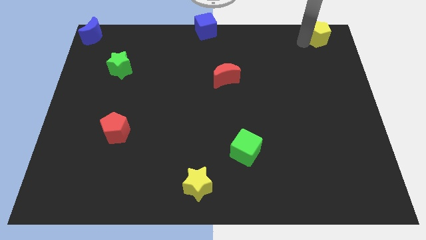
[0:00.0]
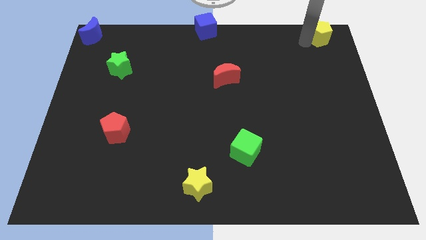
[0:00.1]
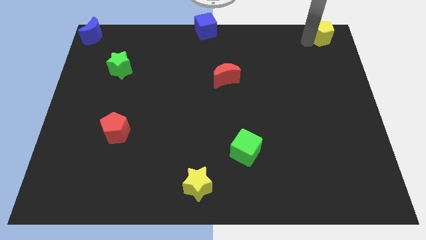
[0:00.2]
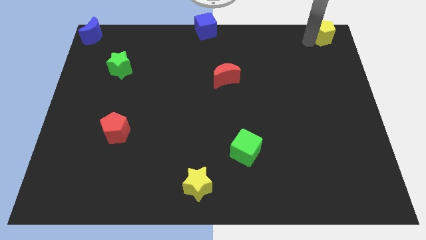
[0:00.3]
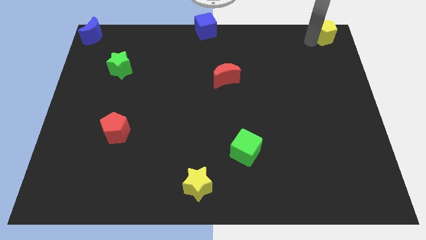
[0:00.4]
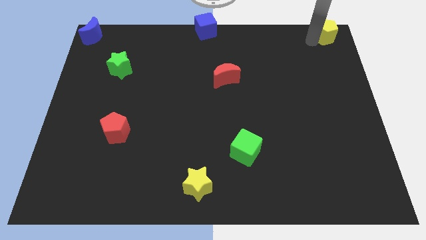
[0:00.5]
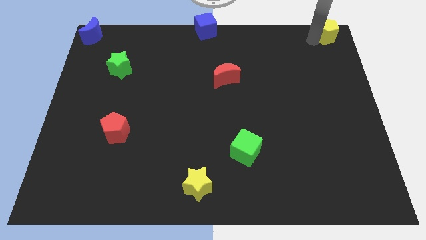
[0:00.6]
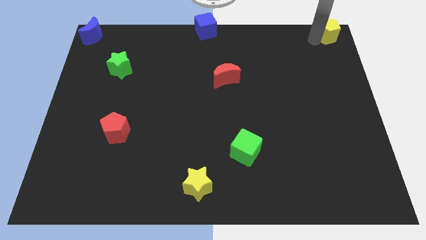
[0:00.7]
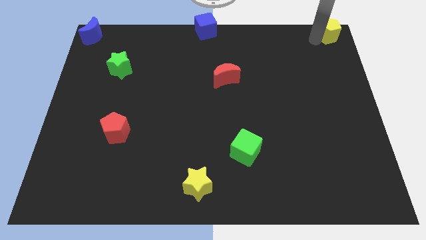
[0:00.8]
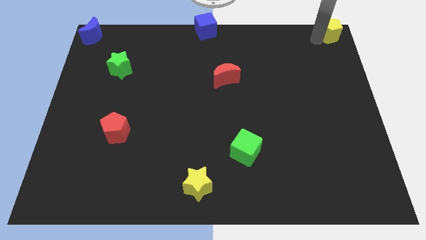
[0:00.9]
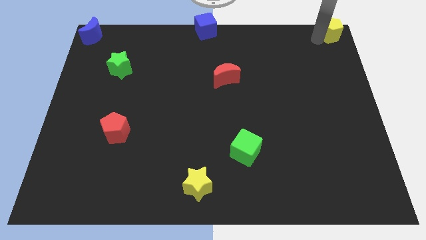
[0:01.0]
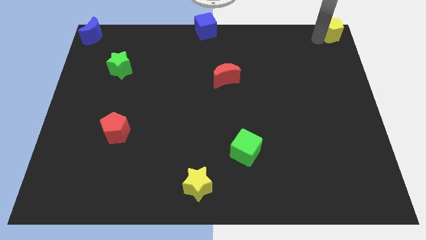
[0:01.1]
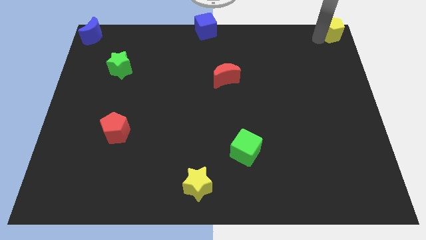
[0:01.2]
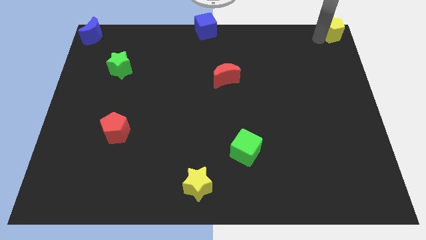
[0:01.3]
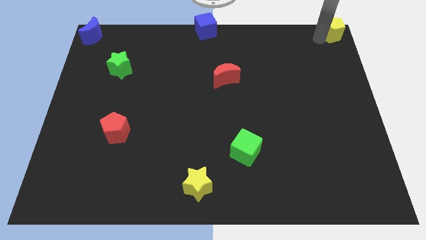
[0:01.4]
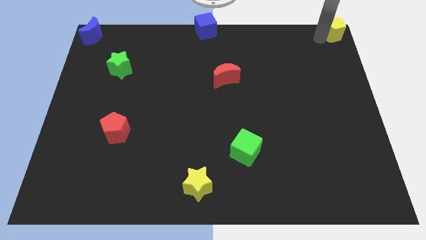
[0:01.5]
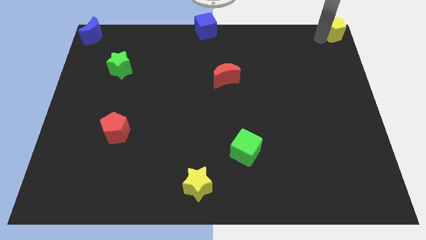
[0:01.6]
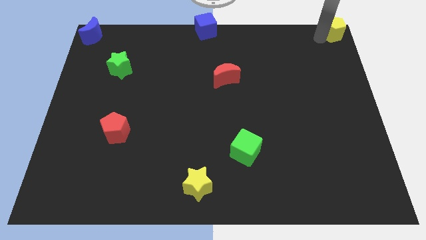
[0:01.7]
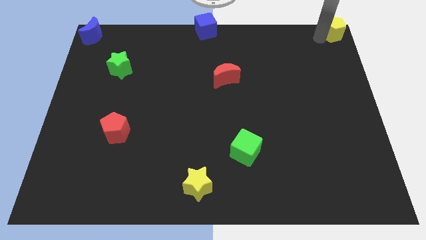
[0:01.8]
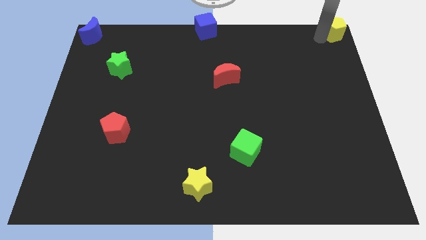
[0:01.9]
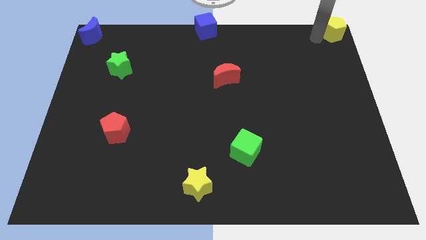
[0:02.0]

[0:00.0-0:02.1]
push the yellow pentagon to the top right corner of the board

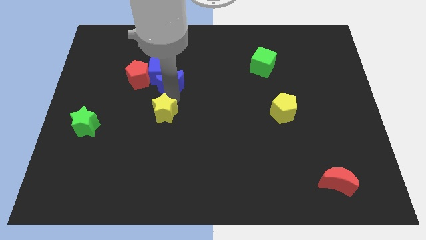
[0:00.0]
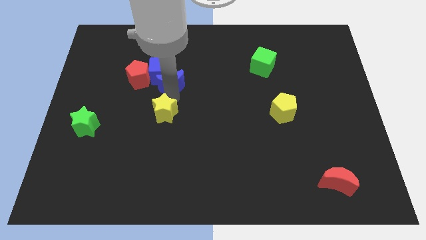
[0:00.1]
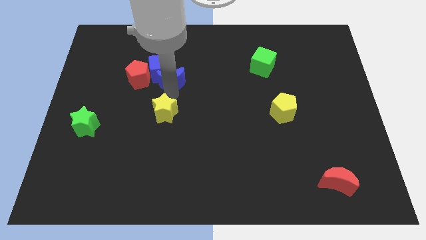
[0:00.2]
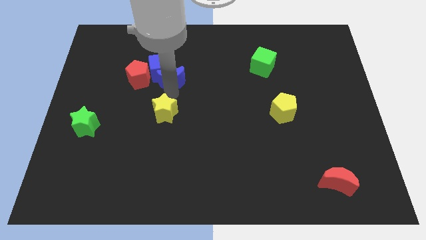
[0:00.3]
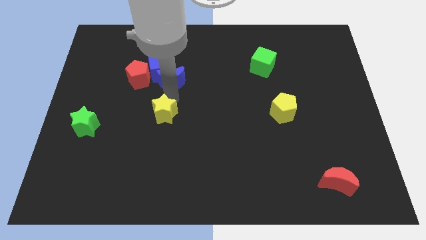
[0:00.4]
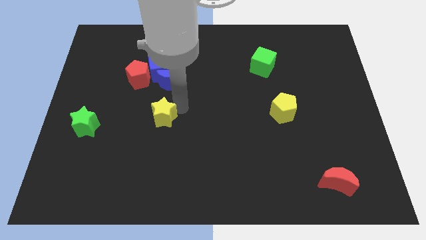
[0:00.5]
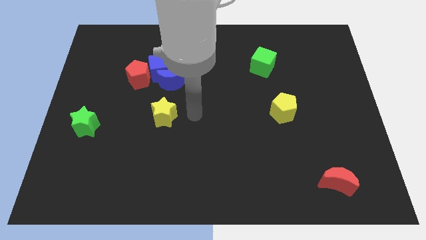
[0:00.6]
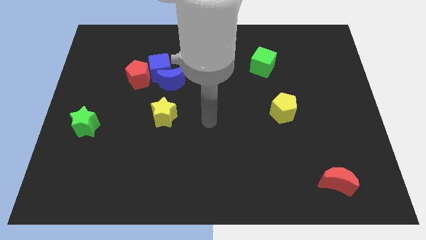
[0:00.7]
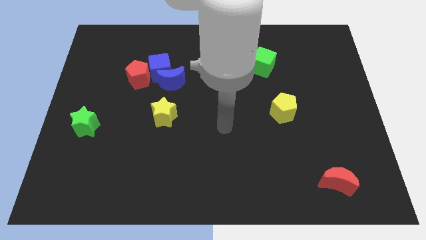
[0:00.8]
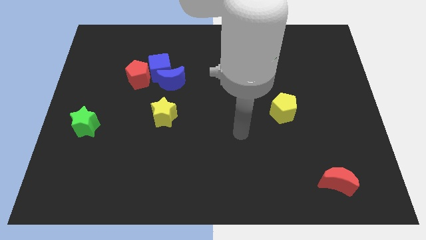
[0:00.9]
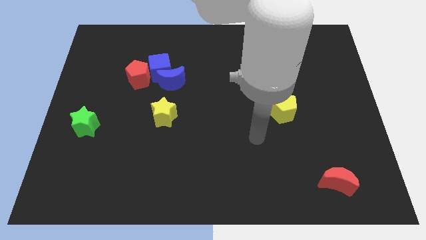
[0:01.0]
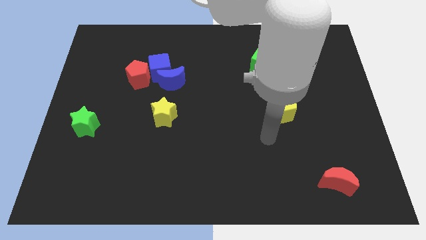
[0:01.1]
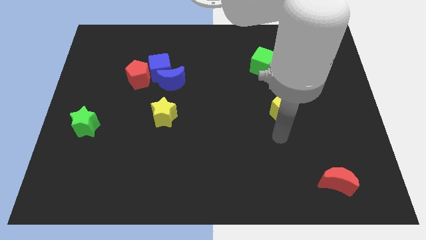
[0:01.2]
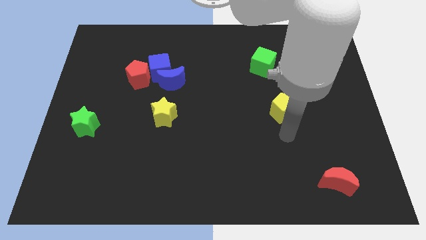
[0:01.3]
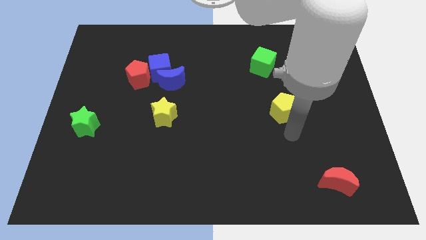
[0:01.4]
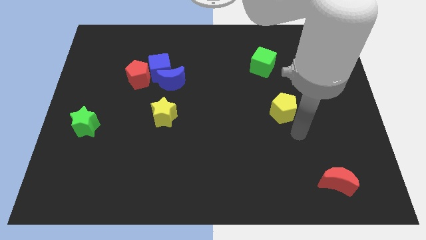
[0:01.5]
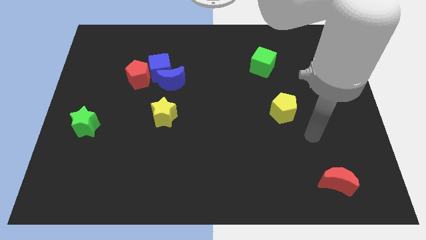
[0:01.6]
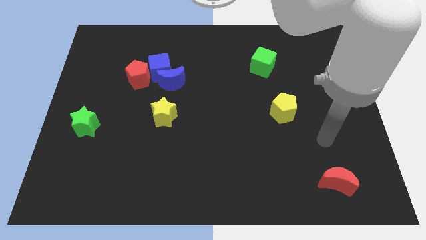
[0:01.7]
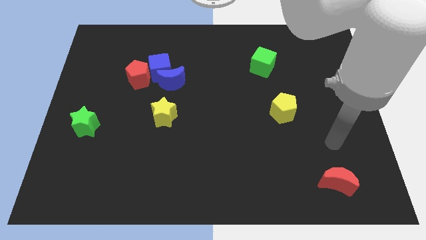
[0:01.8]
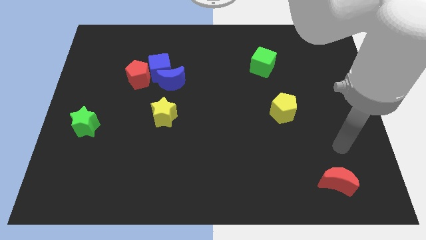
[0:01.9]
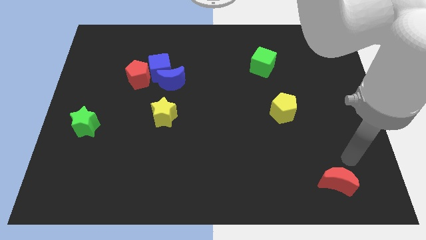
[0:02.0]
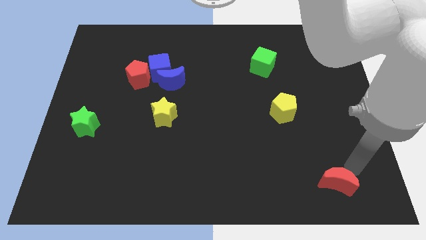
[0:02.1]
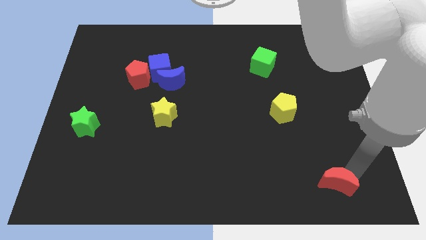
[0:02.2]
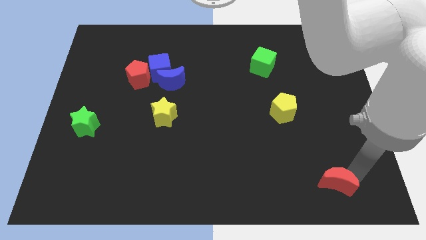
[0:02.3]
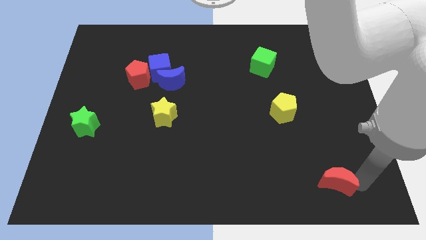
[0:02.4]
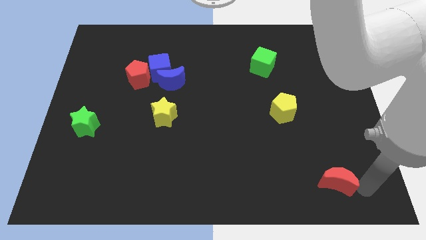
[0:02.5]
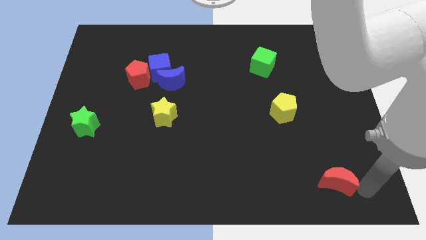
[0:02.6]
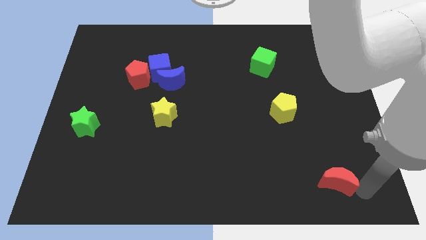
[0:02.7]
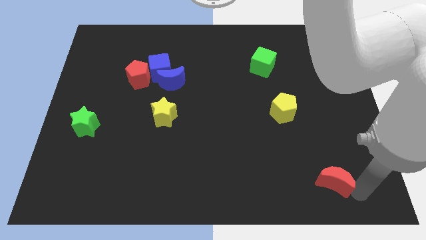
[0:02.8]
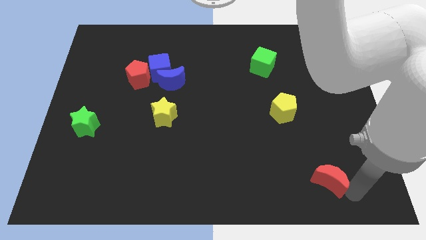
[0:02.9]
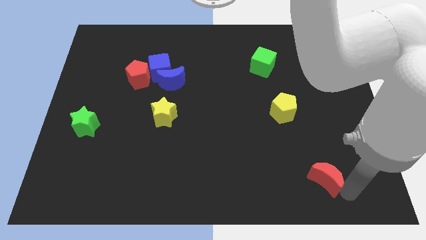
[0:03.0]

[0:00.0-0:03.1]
move red moon slightly towards its left

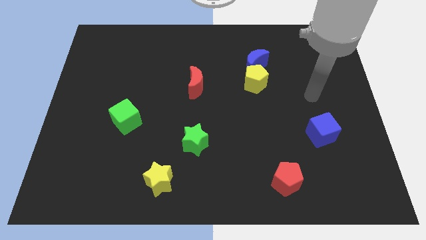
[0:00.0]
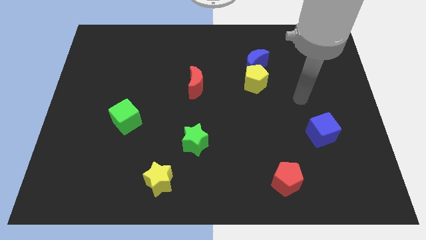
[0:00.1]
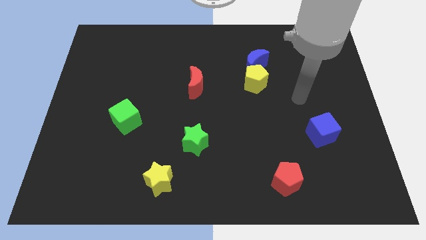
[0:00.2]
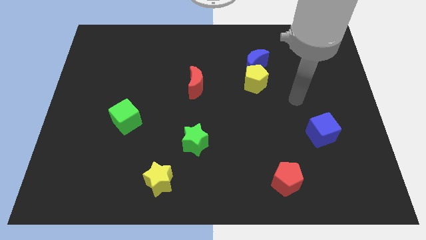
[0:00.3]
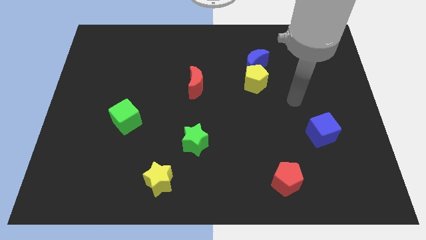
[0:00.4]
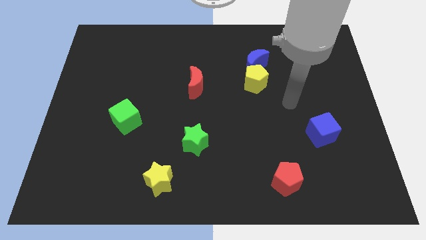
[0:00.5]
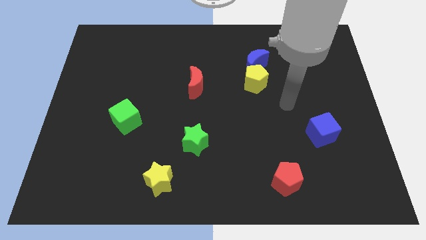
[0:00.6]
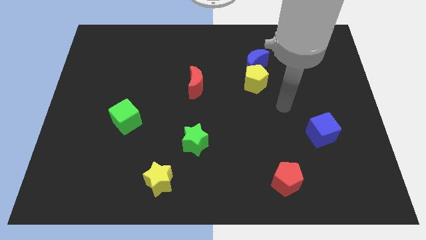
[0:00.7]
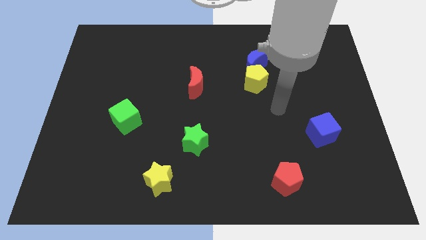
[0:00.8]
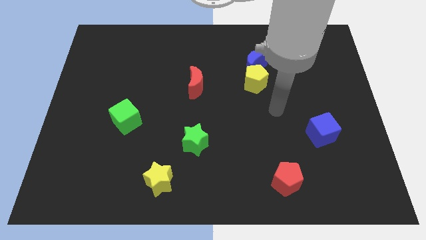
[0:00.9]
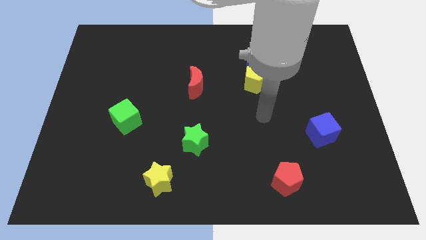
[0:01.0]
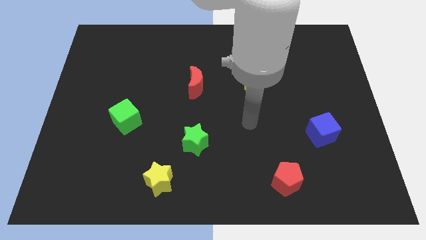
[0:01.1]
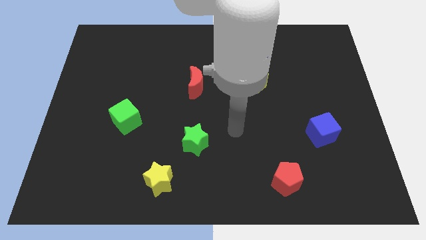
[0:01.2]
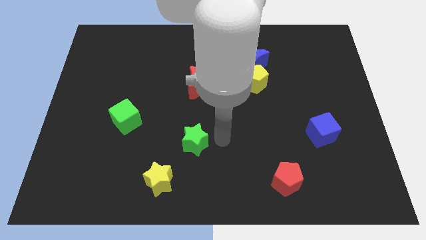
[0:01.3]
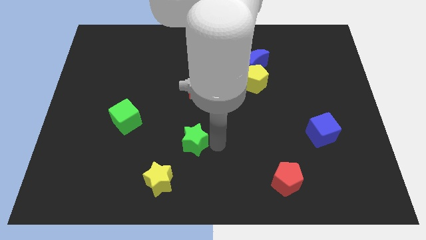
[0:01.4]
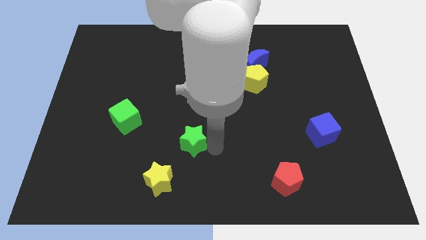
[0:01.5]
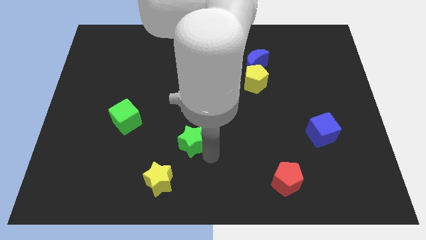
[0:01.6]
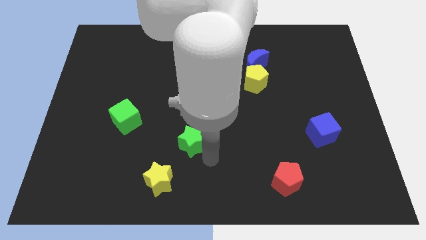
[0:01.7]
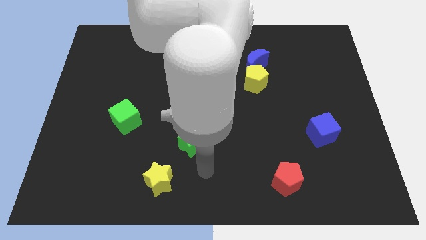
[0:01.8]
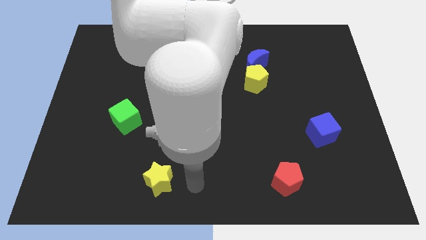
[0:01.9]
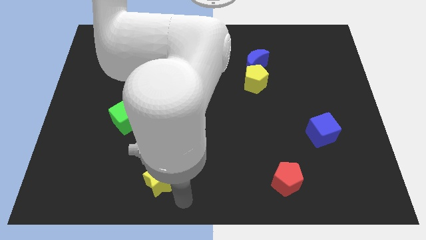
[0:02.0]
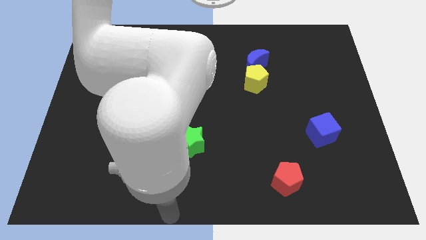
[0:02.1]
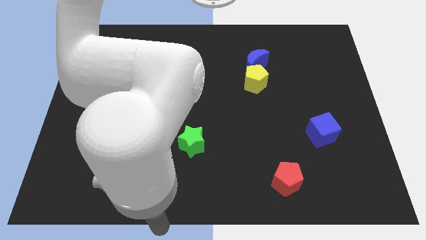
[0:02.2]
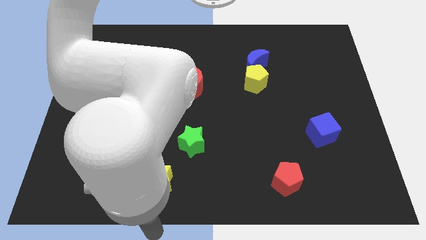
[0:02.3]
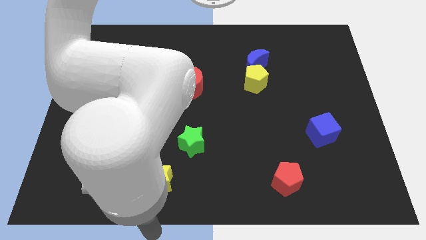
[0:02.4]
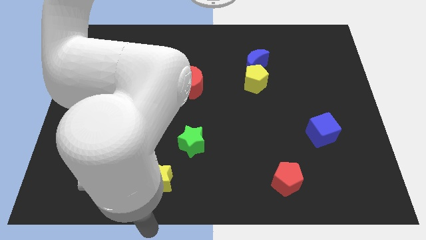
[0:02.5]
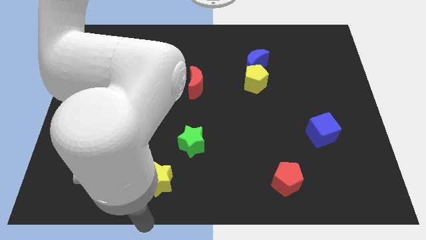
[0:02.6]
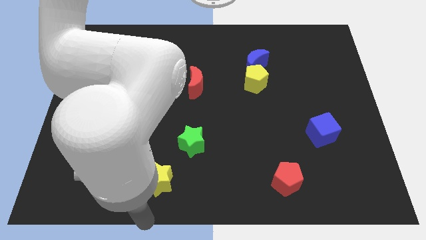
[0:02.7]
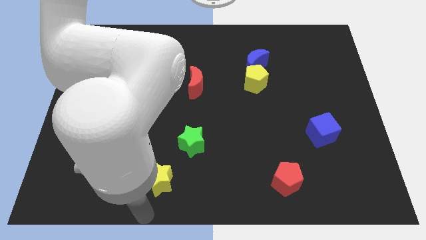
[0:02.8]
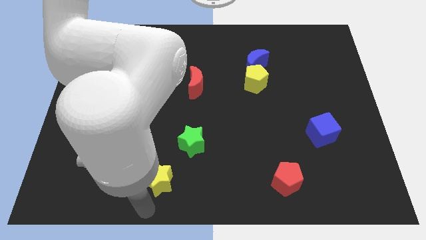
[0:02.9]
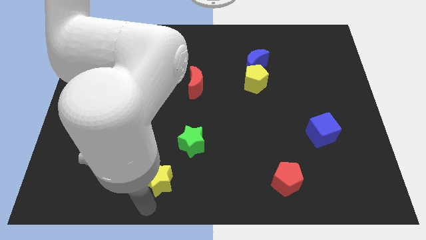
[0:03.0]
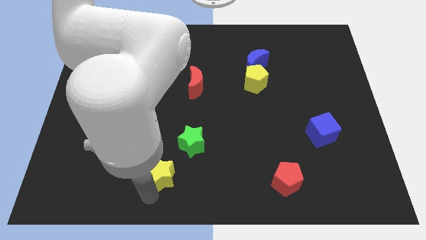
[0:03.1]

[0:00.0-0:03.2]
go near the yellow star

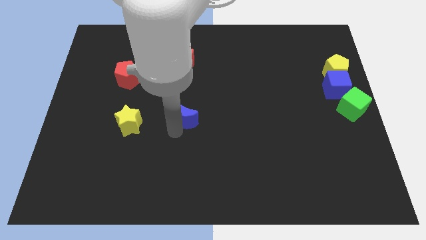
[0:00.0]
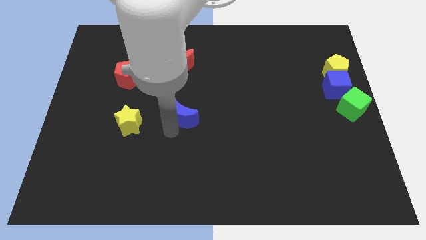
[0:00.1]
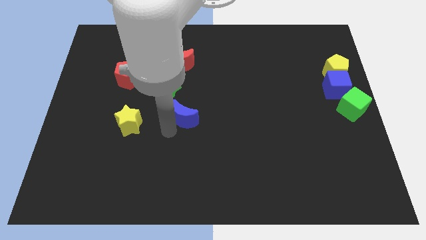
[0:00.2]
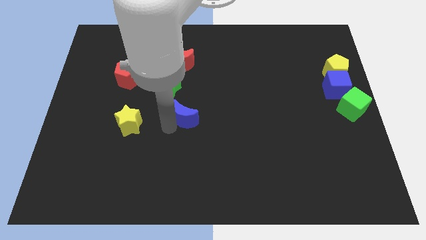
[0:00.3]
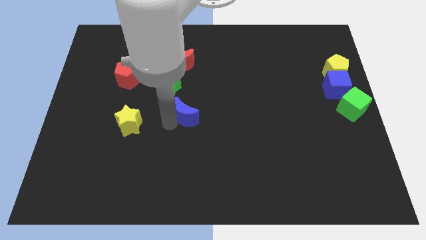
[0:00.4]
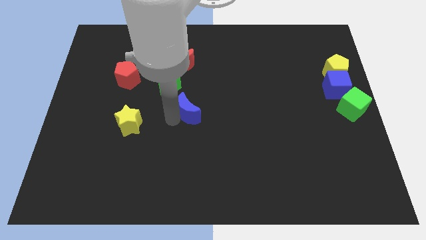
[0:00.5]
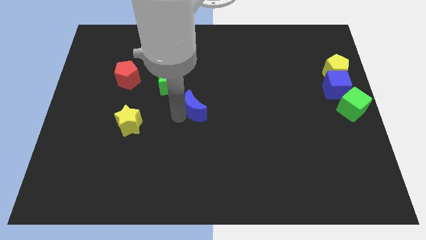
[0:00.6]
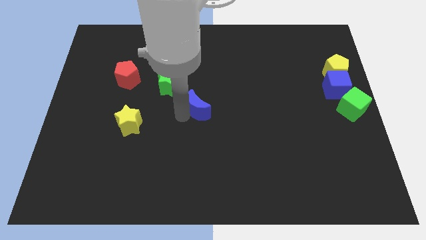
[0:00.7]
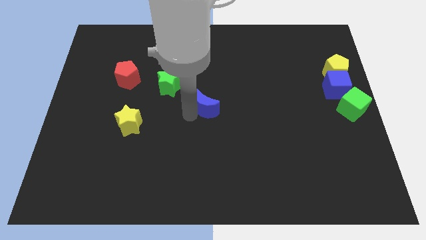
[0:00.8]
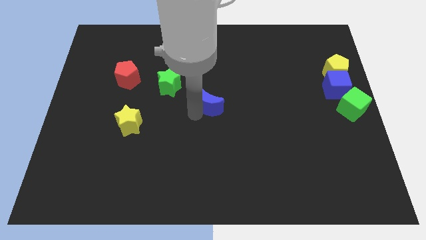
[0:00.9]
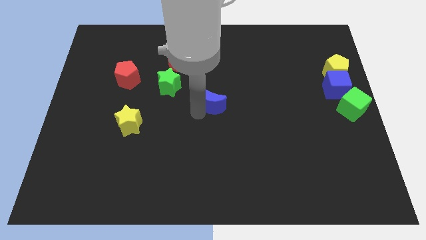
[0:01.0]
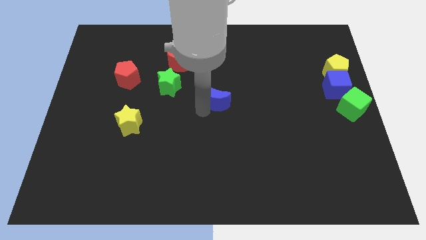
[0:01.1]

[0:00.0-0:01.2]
move blue moon at the center
